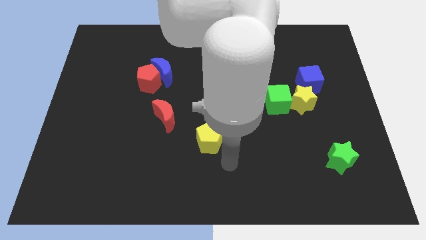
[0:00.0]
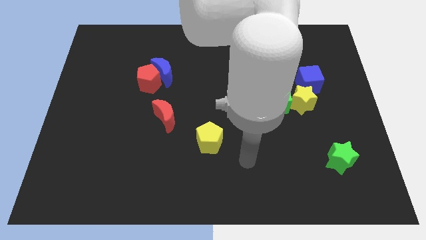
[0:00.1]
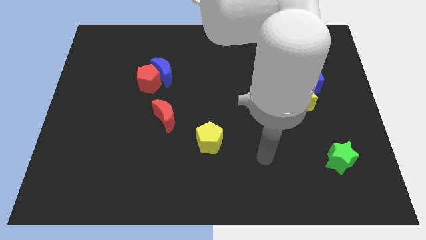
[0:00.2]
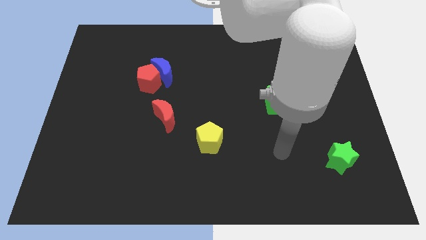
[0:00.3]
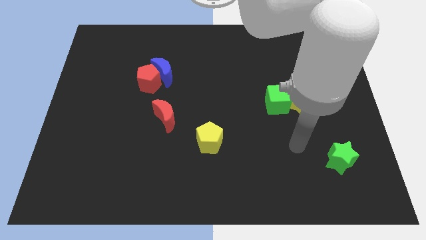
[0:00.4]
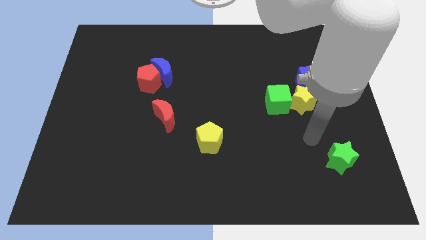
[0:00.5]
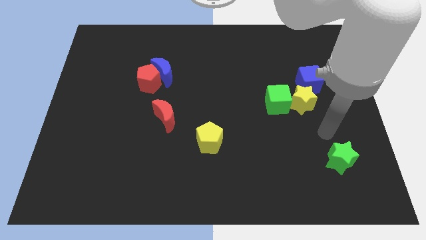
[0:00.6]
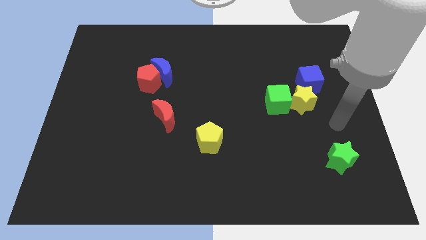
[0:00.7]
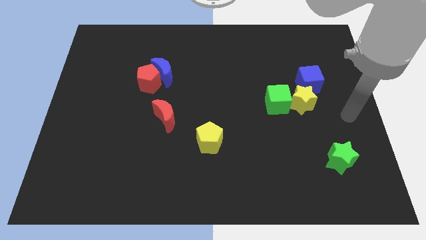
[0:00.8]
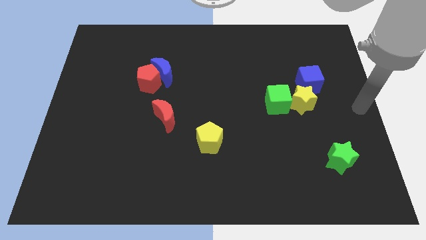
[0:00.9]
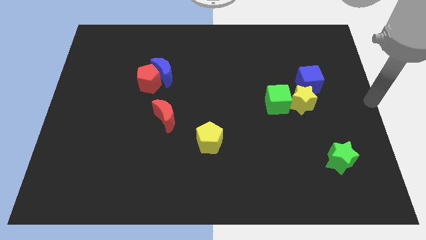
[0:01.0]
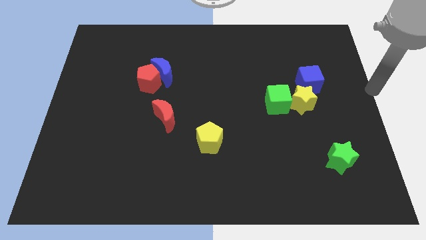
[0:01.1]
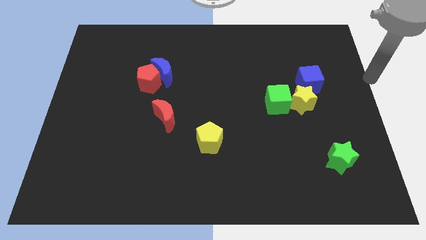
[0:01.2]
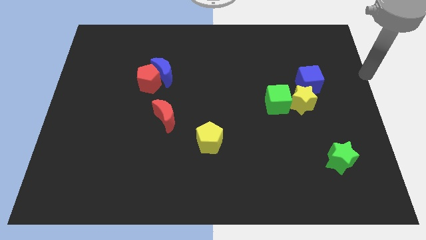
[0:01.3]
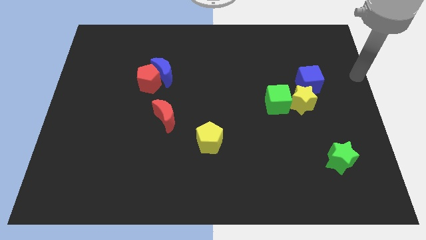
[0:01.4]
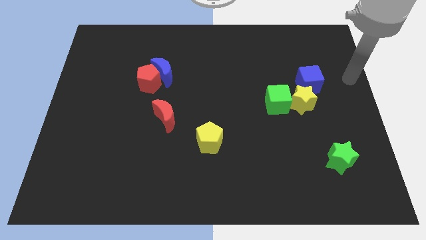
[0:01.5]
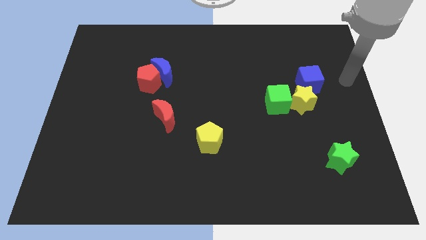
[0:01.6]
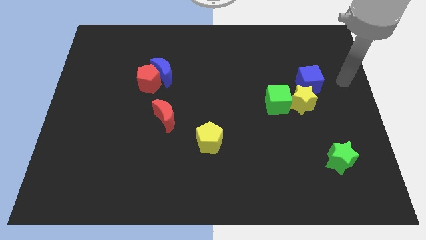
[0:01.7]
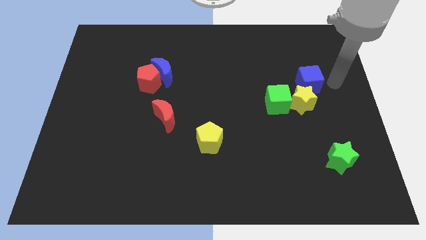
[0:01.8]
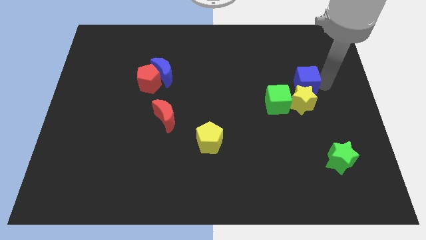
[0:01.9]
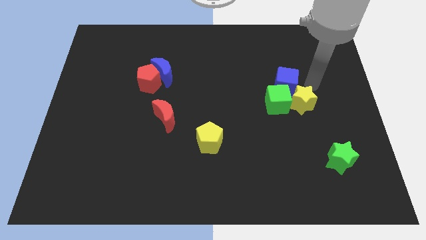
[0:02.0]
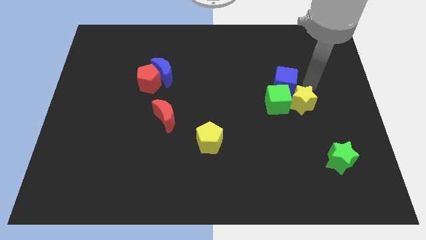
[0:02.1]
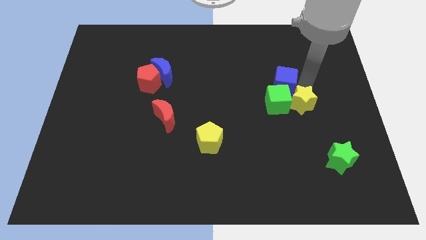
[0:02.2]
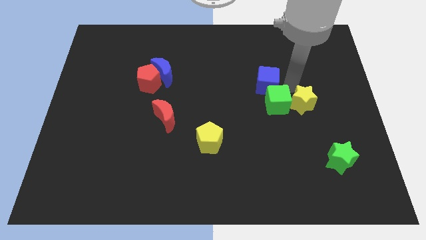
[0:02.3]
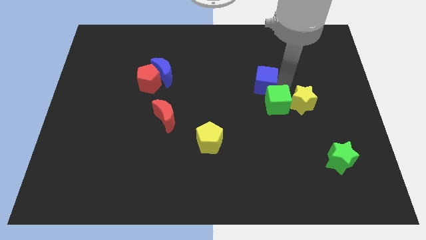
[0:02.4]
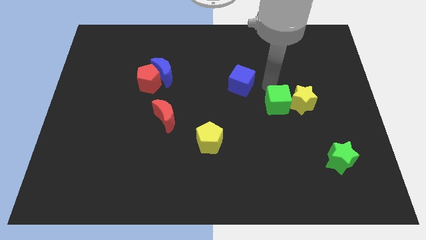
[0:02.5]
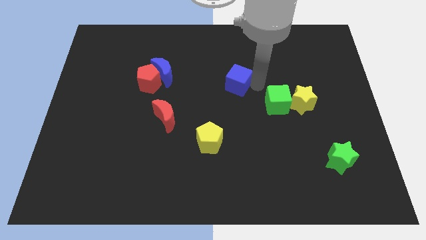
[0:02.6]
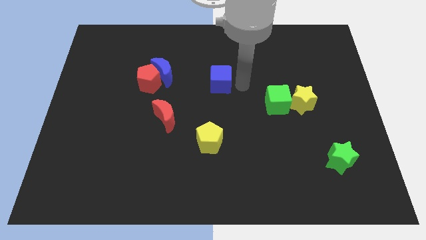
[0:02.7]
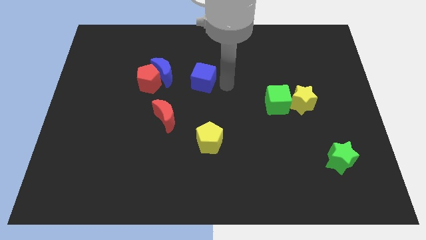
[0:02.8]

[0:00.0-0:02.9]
push blue cube above yellow pentagon

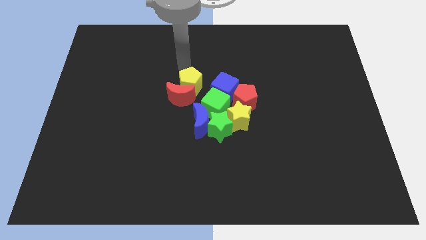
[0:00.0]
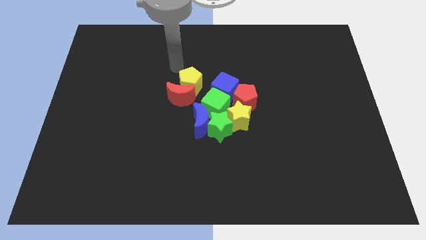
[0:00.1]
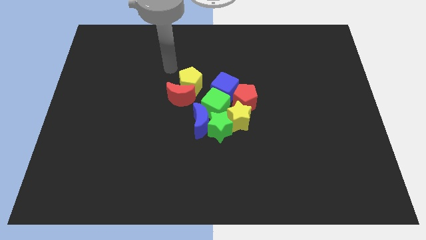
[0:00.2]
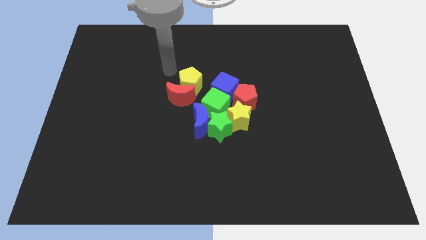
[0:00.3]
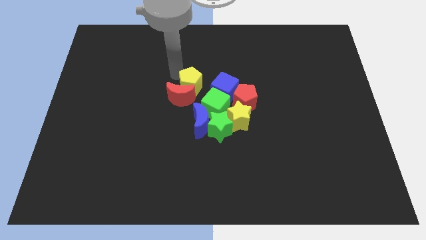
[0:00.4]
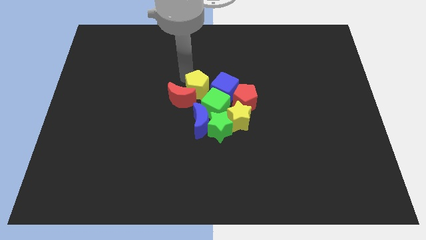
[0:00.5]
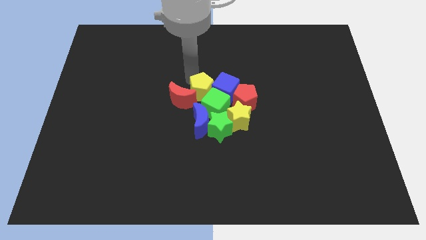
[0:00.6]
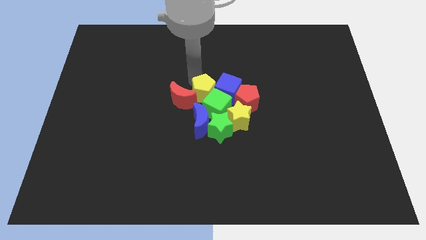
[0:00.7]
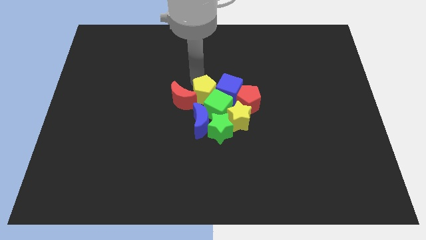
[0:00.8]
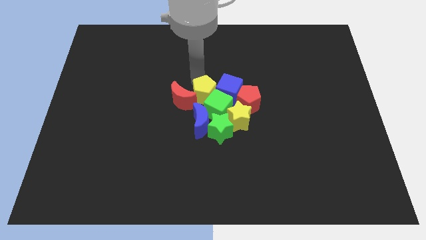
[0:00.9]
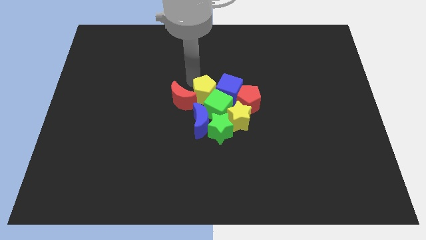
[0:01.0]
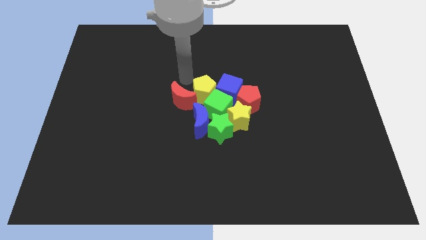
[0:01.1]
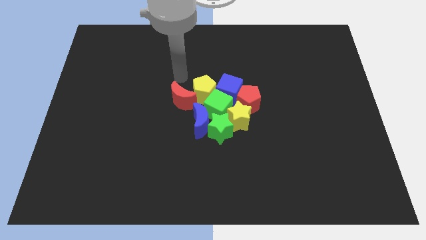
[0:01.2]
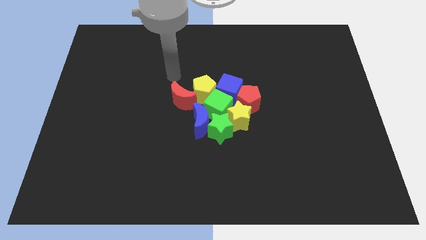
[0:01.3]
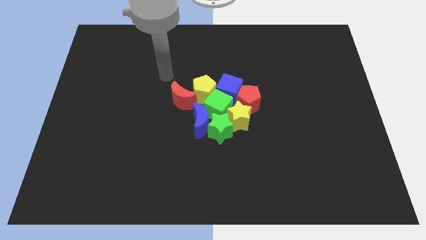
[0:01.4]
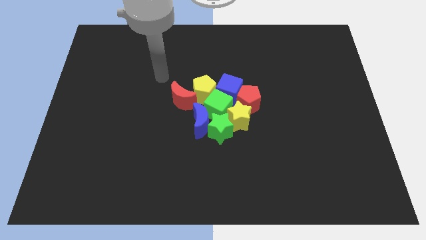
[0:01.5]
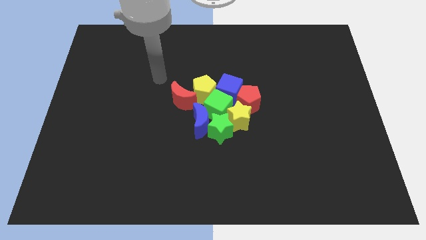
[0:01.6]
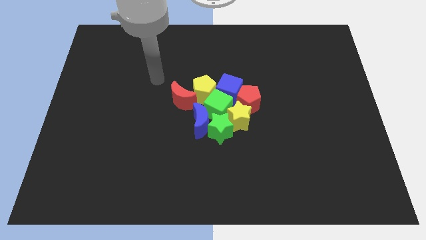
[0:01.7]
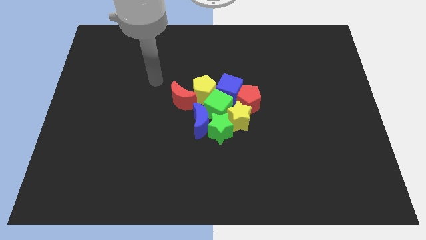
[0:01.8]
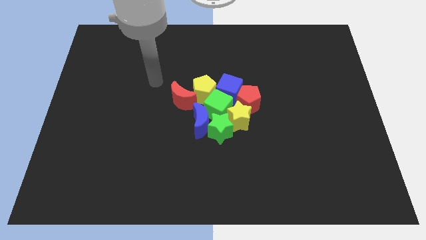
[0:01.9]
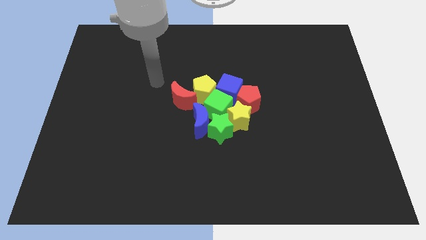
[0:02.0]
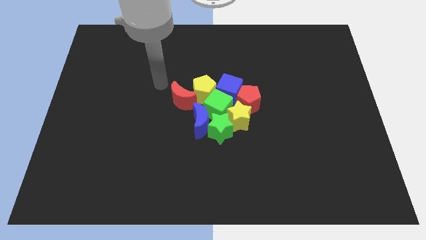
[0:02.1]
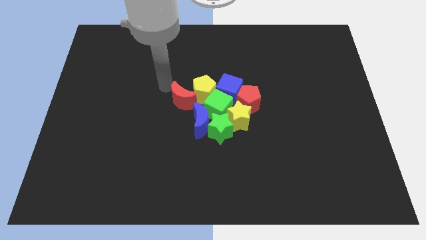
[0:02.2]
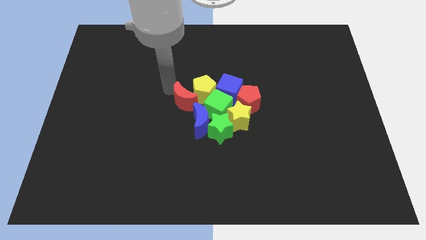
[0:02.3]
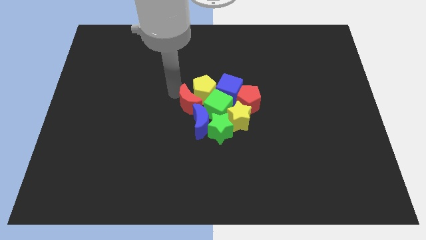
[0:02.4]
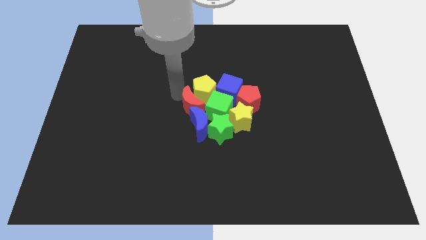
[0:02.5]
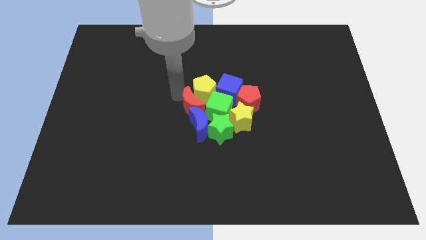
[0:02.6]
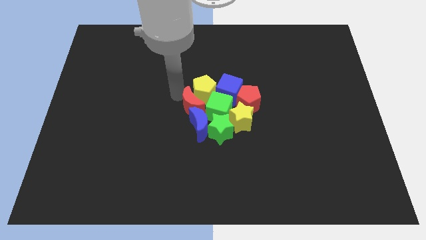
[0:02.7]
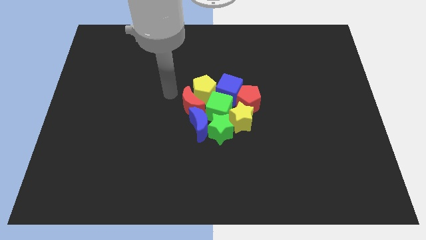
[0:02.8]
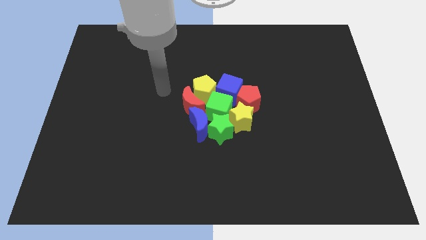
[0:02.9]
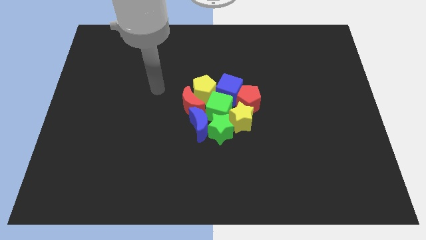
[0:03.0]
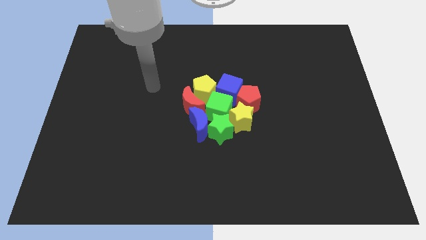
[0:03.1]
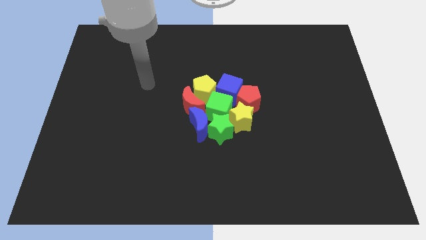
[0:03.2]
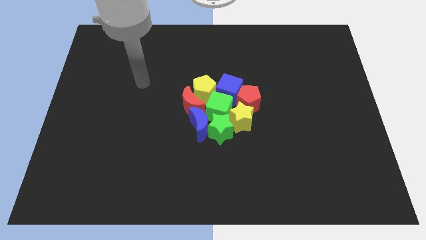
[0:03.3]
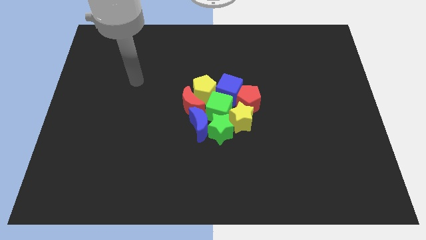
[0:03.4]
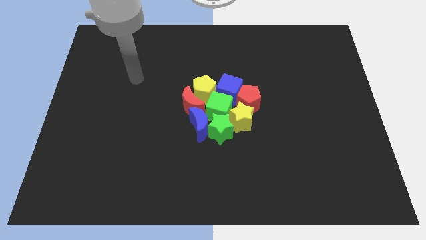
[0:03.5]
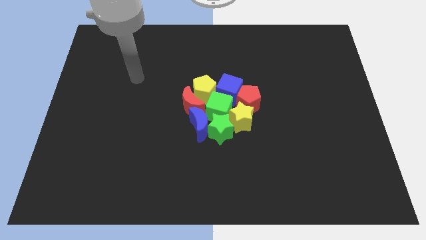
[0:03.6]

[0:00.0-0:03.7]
slide the yellow pentagon and red crescent in to the group of blocks

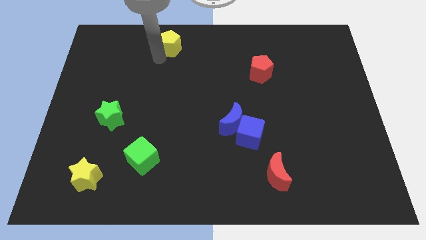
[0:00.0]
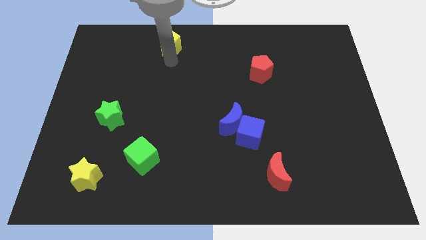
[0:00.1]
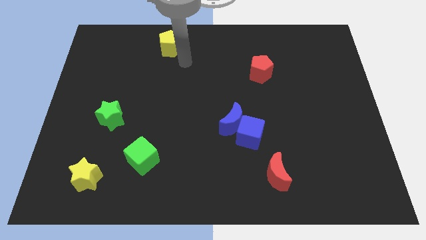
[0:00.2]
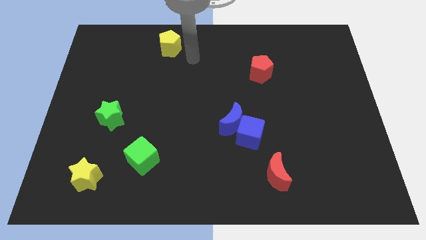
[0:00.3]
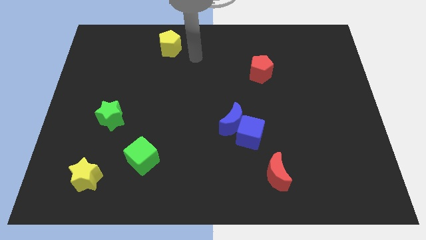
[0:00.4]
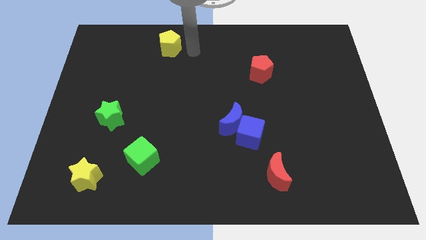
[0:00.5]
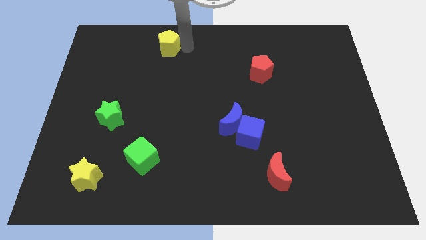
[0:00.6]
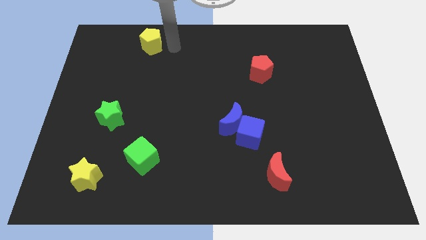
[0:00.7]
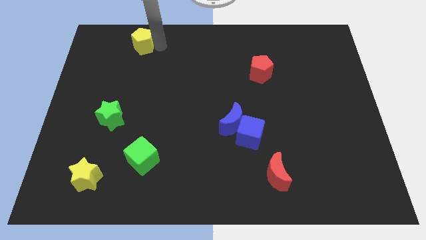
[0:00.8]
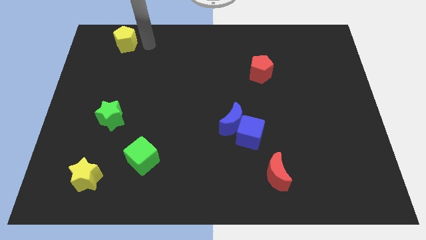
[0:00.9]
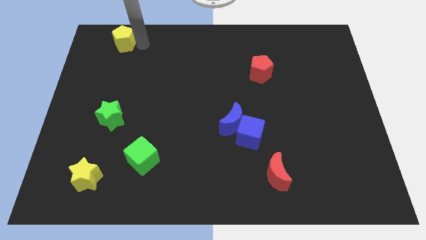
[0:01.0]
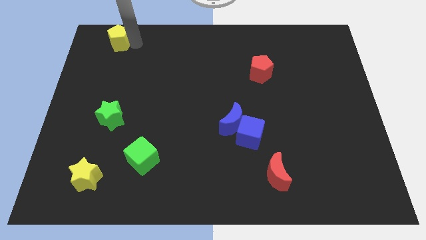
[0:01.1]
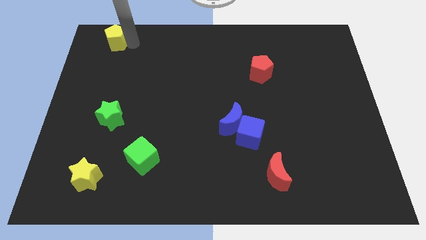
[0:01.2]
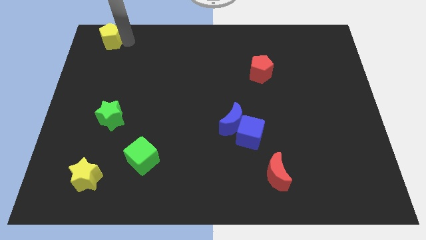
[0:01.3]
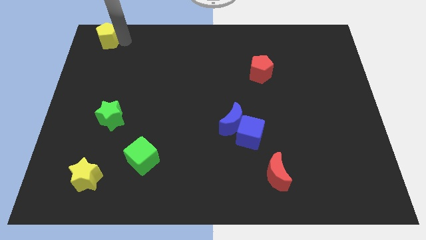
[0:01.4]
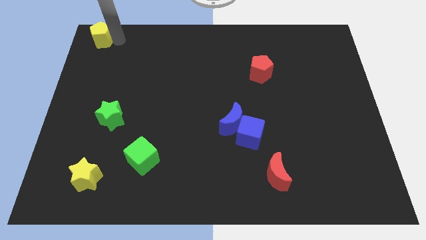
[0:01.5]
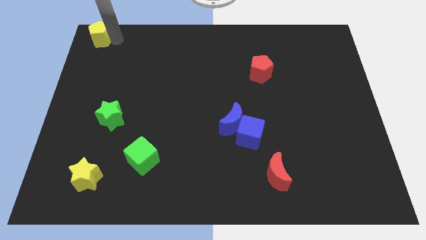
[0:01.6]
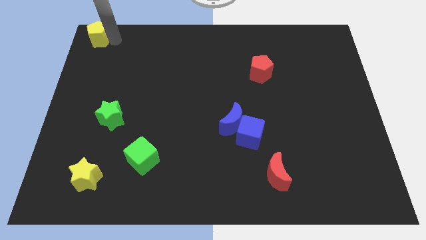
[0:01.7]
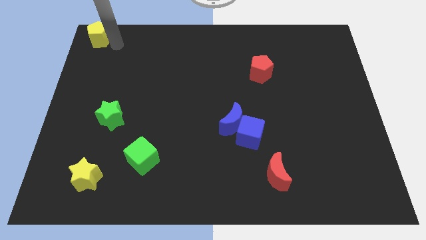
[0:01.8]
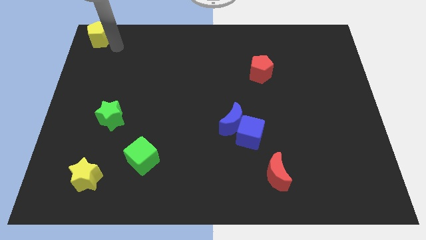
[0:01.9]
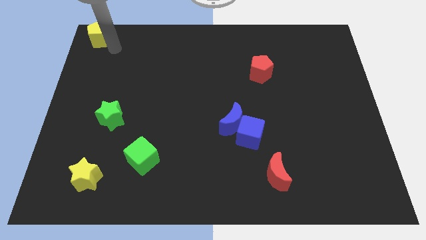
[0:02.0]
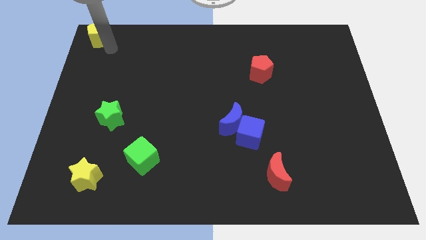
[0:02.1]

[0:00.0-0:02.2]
push yellow pentagon to the top left corner
